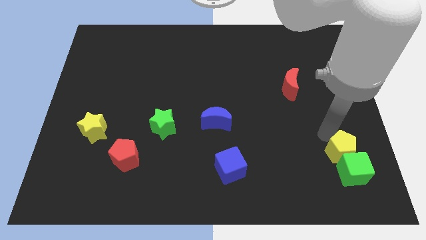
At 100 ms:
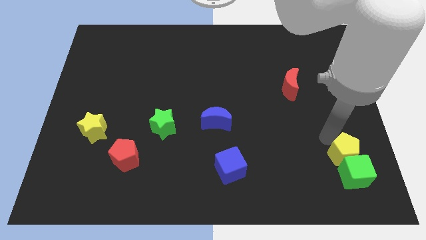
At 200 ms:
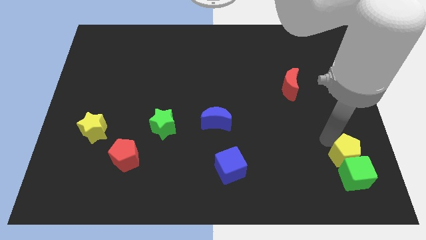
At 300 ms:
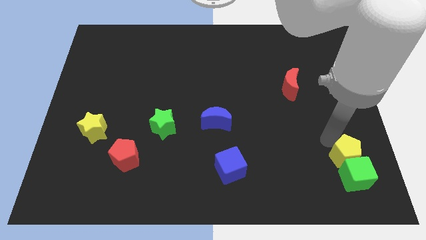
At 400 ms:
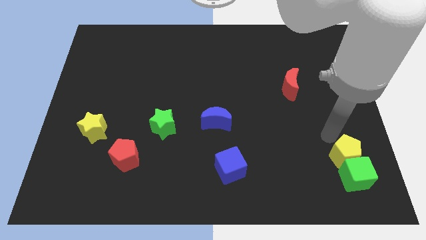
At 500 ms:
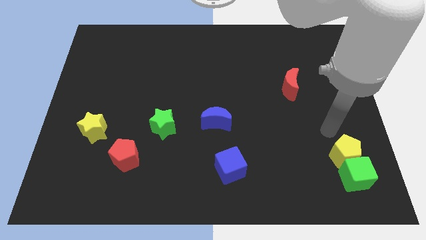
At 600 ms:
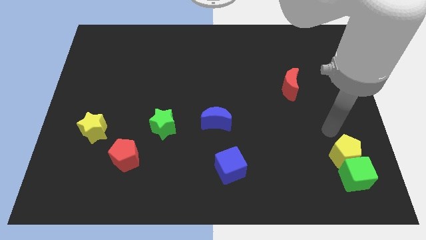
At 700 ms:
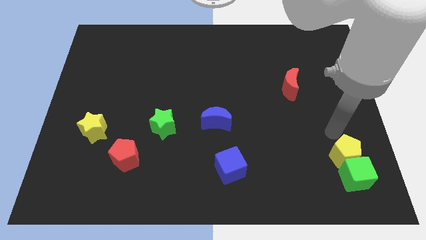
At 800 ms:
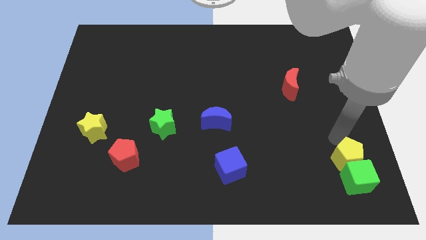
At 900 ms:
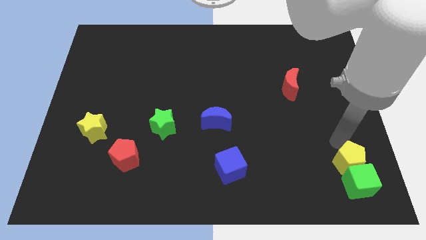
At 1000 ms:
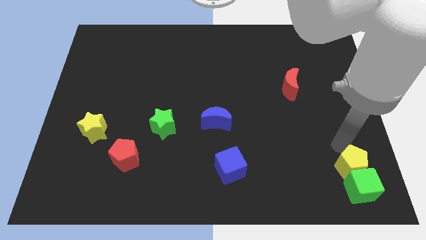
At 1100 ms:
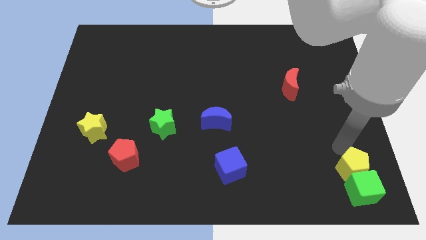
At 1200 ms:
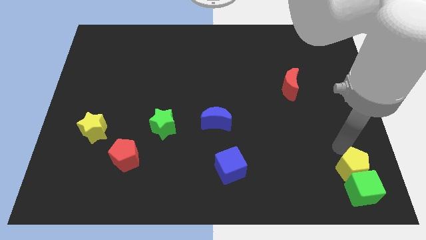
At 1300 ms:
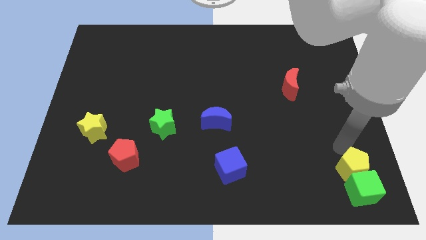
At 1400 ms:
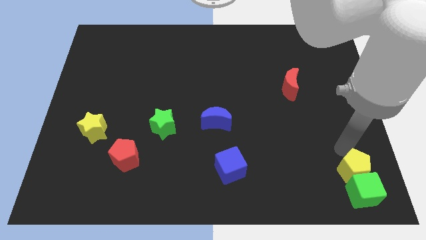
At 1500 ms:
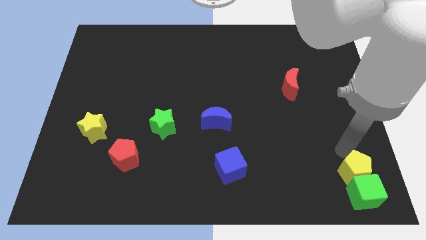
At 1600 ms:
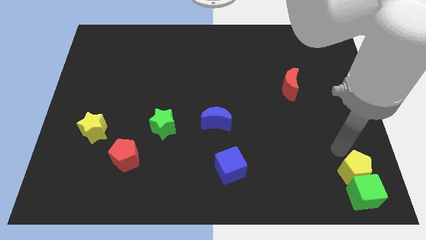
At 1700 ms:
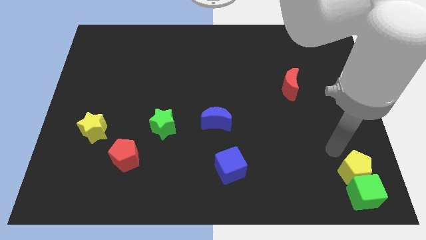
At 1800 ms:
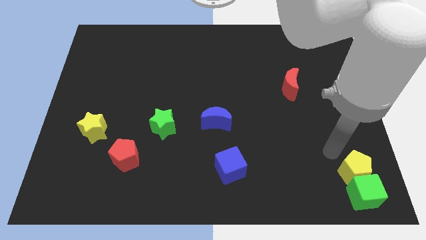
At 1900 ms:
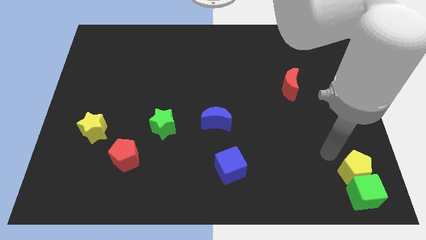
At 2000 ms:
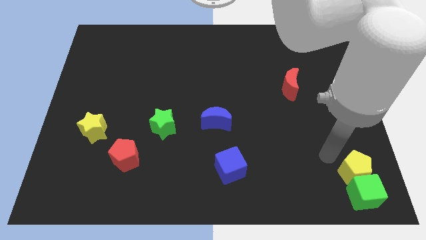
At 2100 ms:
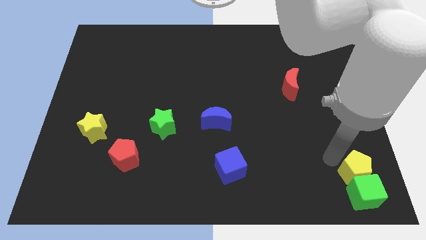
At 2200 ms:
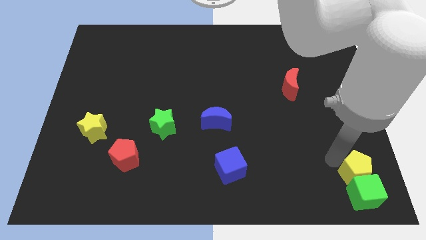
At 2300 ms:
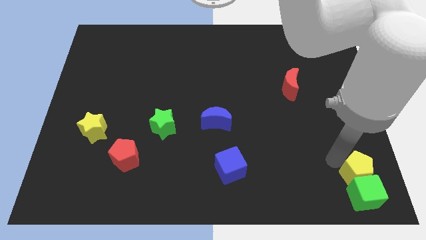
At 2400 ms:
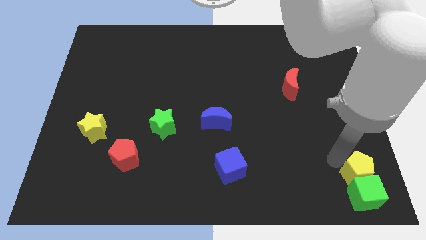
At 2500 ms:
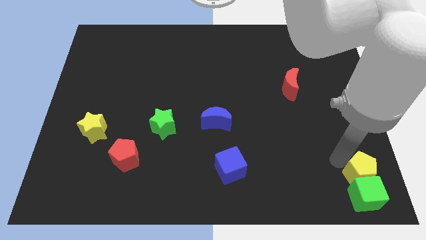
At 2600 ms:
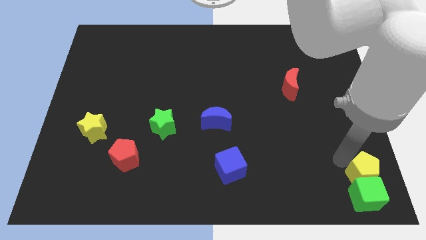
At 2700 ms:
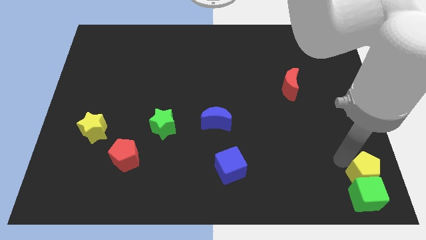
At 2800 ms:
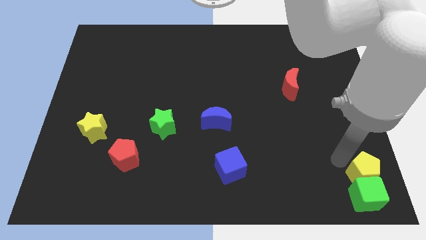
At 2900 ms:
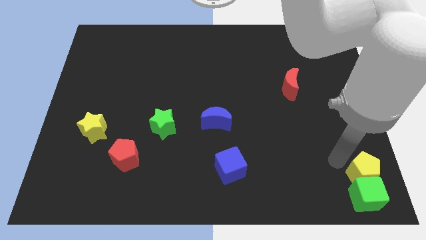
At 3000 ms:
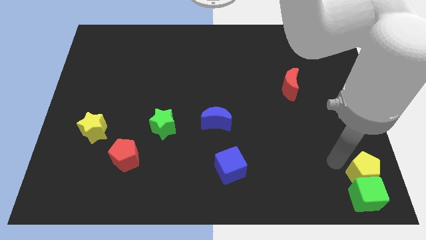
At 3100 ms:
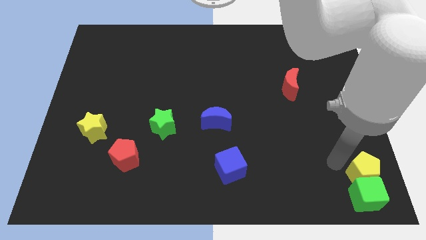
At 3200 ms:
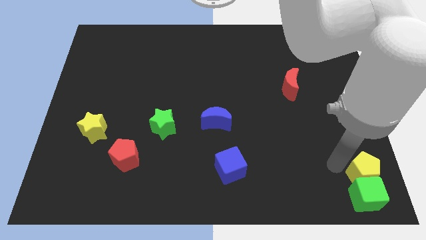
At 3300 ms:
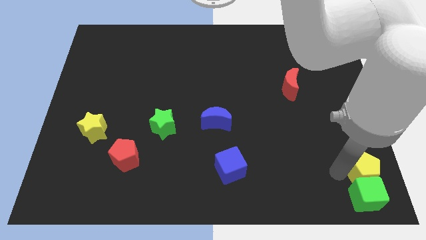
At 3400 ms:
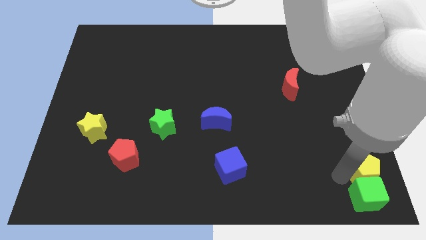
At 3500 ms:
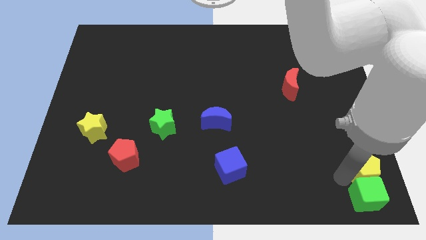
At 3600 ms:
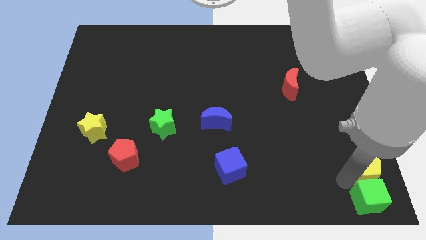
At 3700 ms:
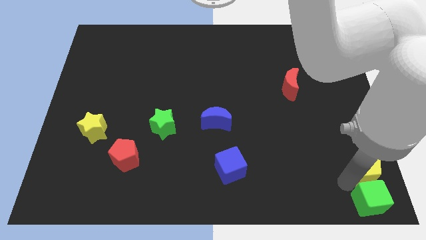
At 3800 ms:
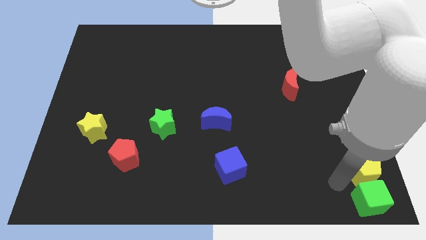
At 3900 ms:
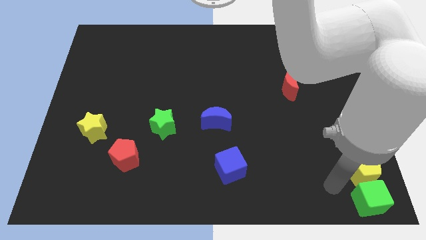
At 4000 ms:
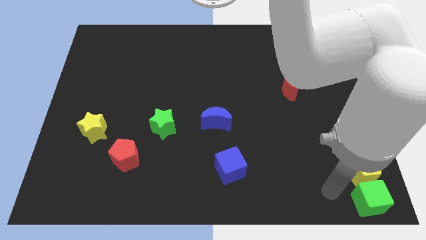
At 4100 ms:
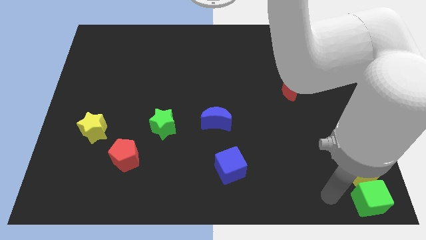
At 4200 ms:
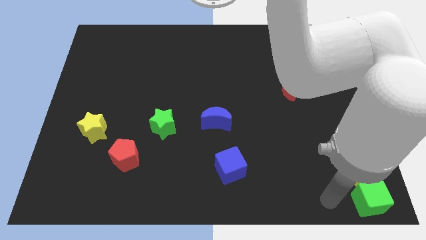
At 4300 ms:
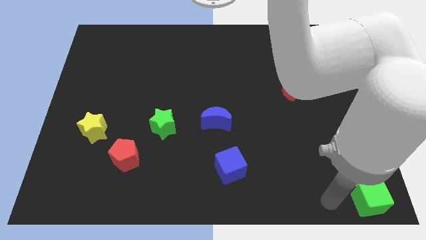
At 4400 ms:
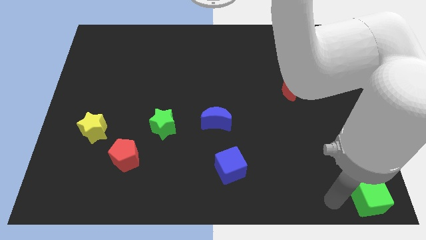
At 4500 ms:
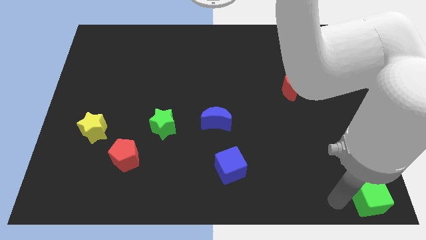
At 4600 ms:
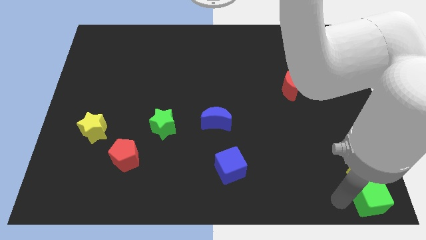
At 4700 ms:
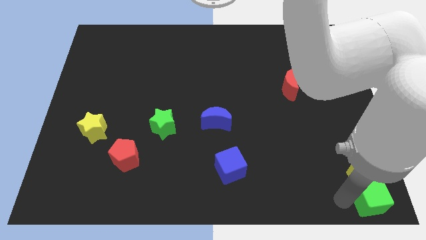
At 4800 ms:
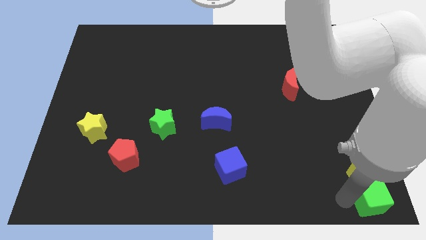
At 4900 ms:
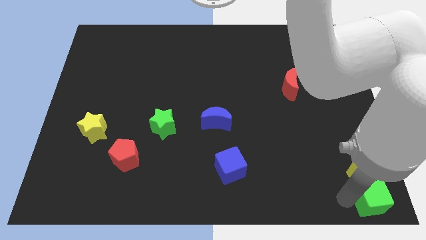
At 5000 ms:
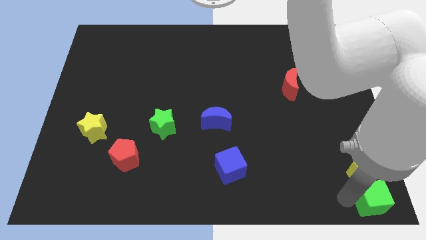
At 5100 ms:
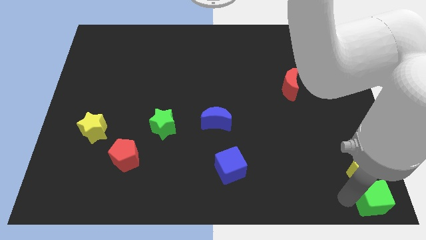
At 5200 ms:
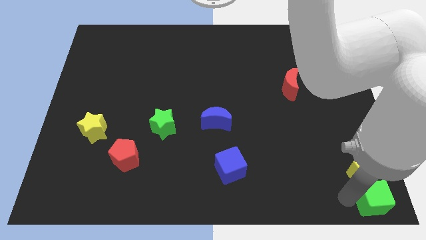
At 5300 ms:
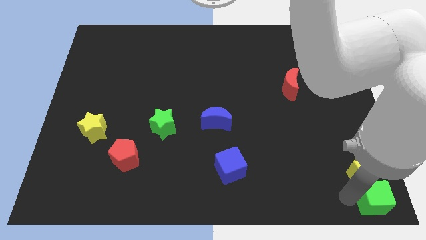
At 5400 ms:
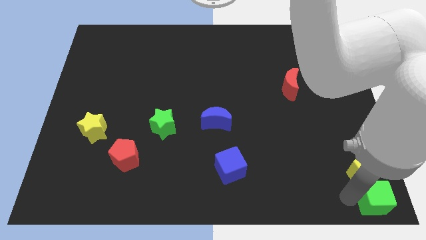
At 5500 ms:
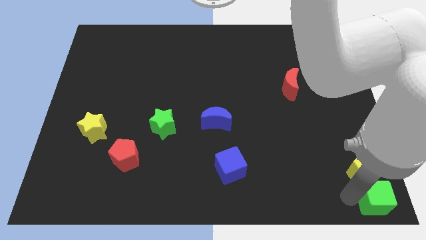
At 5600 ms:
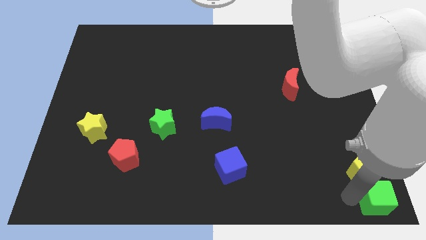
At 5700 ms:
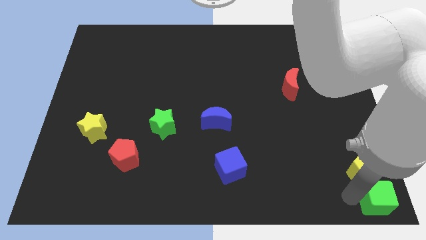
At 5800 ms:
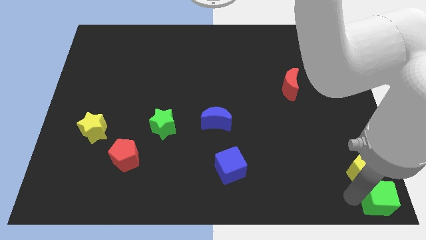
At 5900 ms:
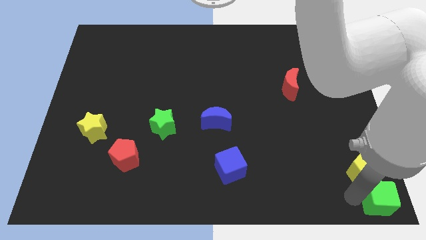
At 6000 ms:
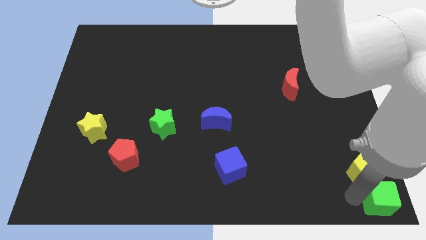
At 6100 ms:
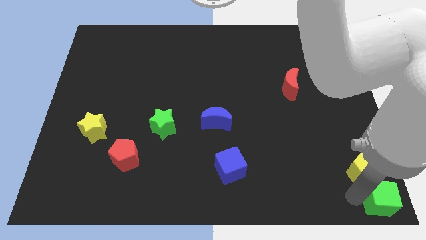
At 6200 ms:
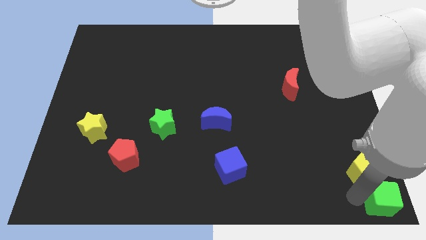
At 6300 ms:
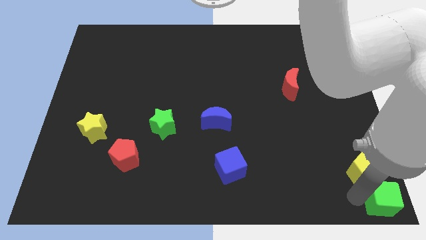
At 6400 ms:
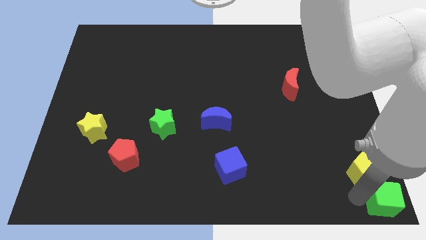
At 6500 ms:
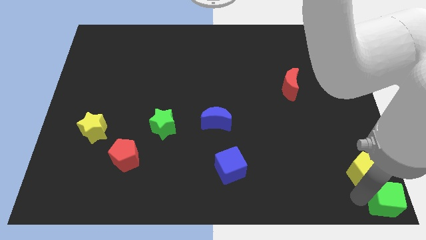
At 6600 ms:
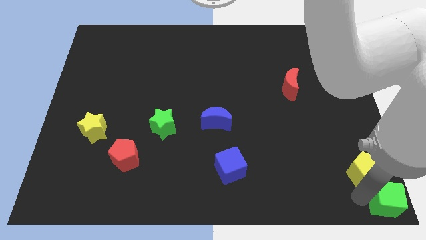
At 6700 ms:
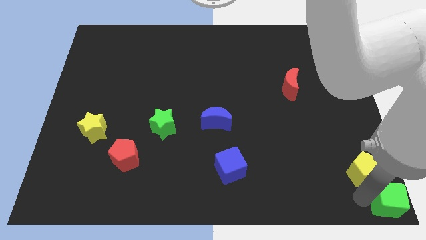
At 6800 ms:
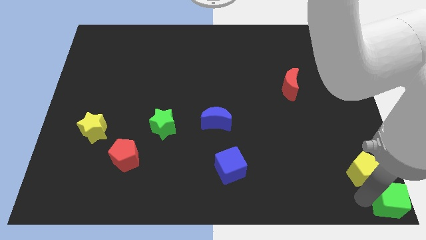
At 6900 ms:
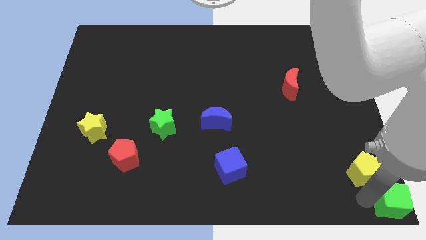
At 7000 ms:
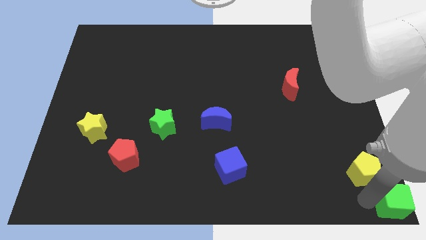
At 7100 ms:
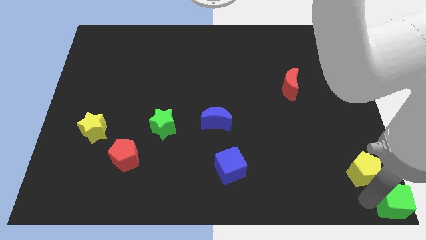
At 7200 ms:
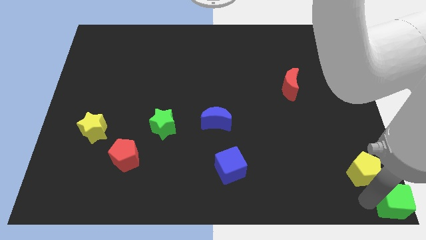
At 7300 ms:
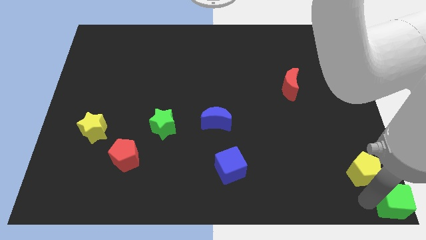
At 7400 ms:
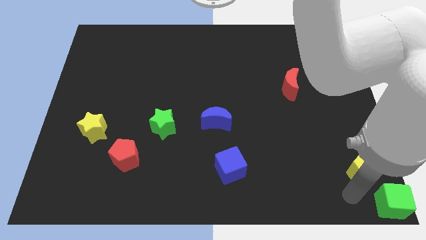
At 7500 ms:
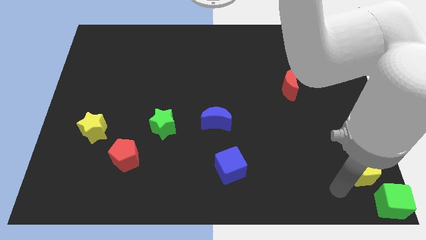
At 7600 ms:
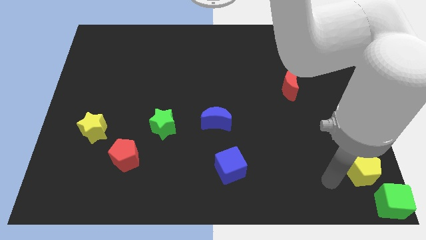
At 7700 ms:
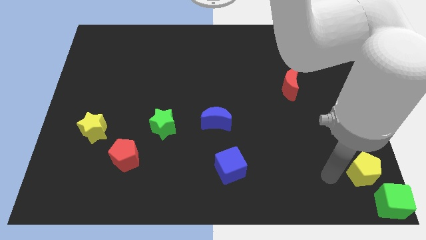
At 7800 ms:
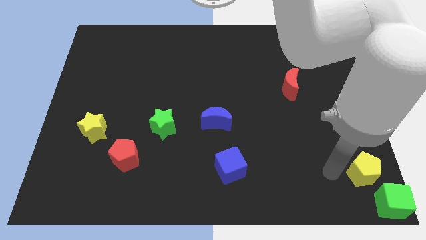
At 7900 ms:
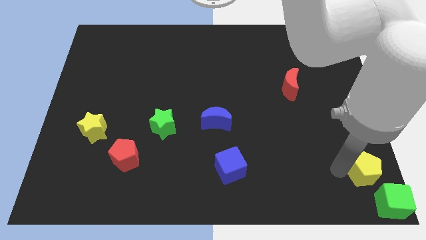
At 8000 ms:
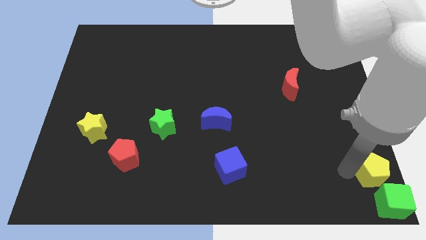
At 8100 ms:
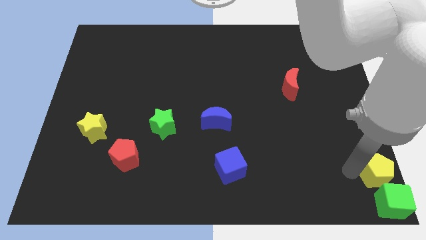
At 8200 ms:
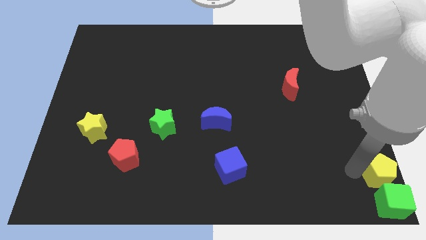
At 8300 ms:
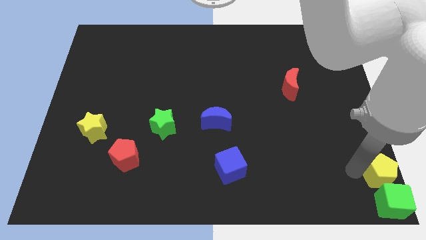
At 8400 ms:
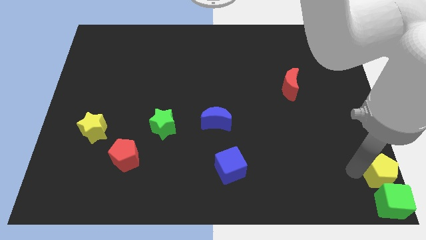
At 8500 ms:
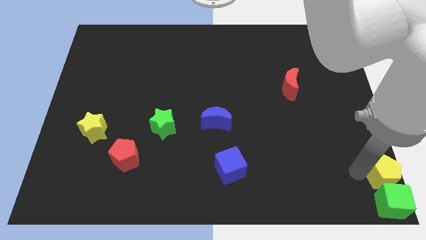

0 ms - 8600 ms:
move the yellow pentagon and green cube towards the right bottom corner of the board

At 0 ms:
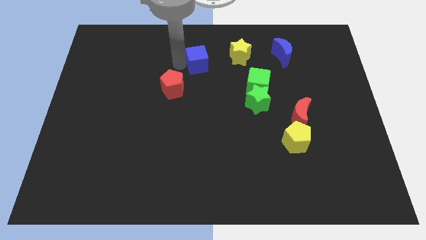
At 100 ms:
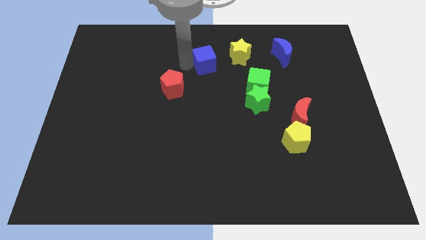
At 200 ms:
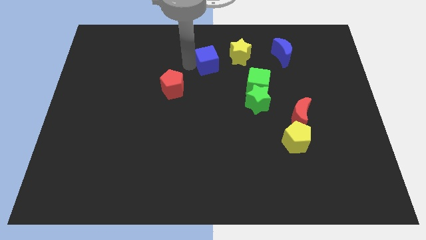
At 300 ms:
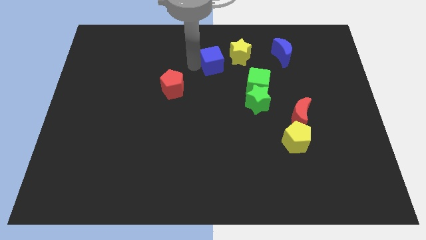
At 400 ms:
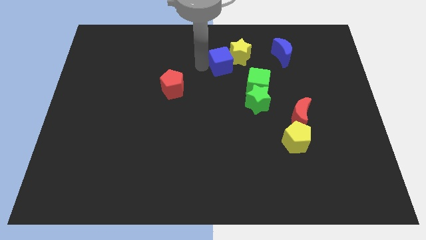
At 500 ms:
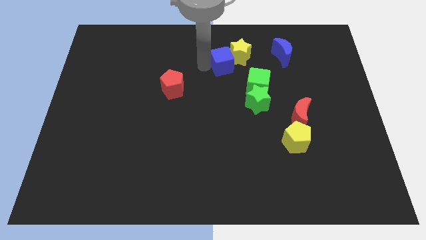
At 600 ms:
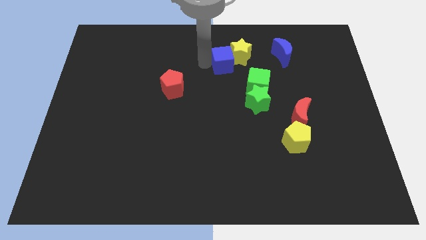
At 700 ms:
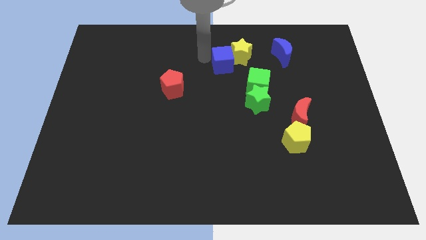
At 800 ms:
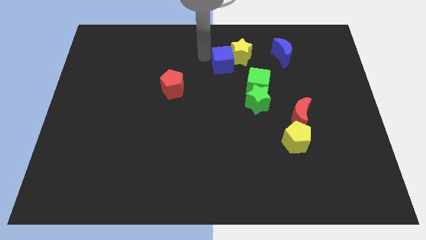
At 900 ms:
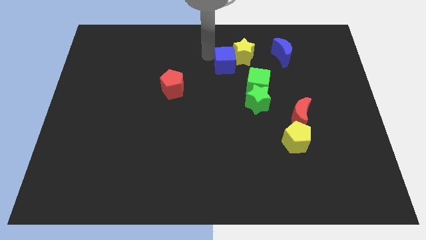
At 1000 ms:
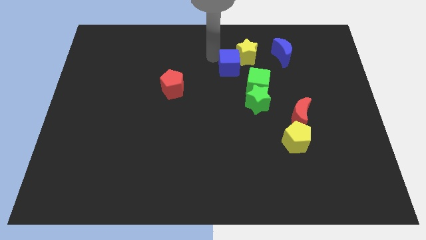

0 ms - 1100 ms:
drag the blue cube into the yellow star
